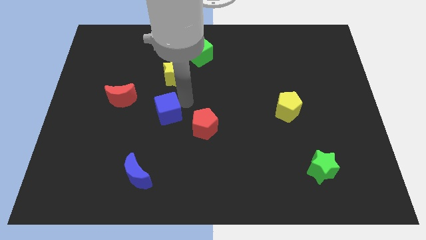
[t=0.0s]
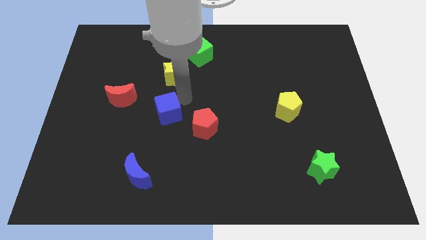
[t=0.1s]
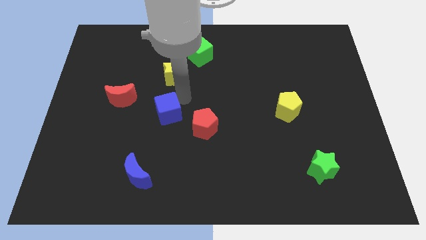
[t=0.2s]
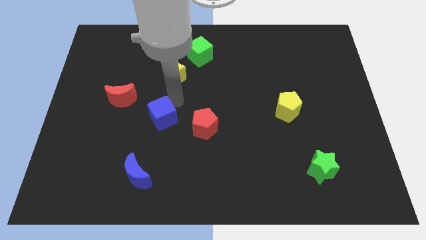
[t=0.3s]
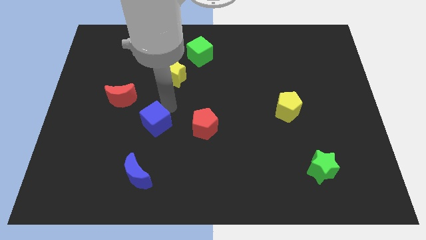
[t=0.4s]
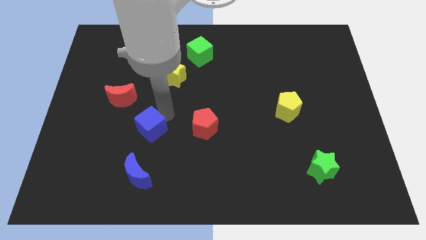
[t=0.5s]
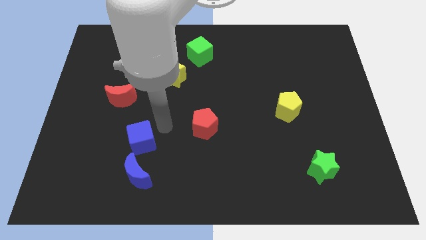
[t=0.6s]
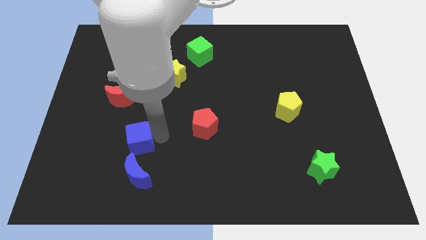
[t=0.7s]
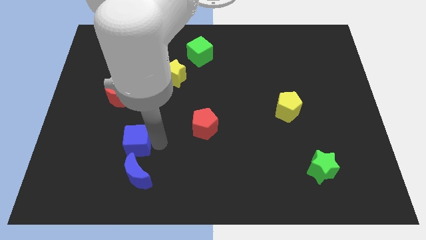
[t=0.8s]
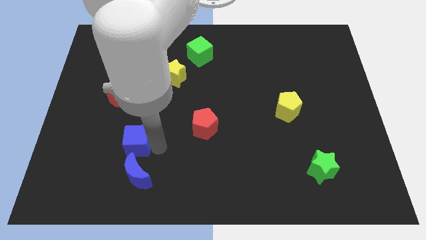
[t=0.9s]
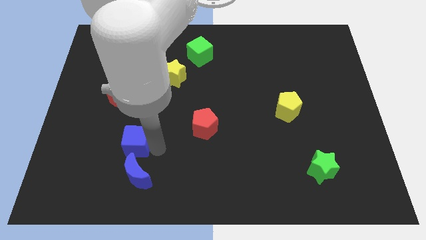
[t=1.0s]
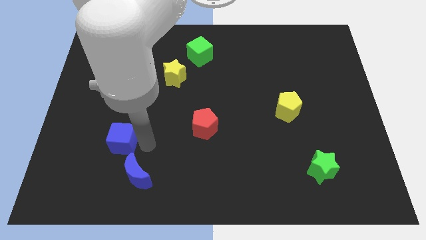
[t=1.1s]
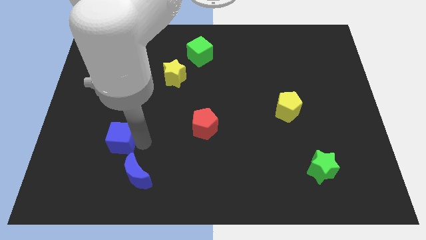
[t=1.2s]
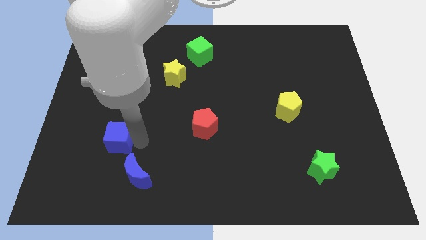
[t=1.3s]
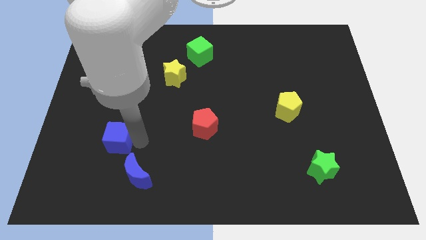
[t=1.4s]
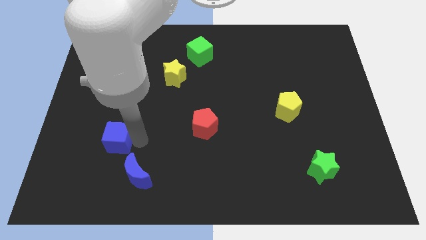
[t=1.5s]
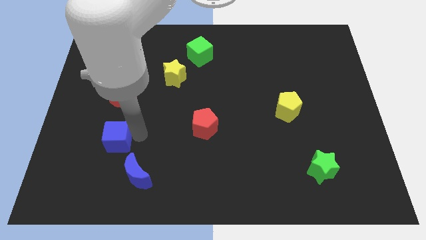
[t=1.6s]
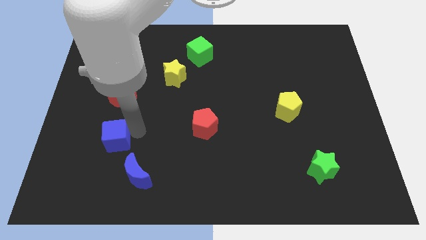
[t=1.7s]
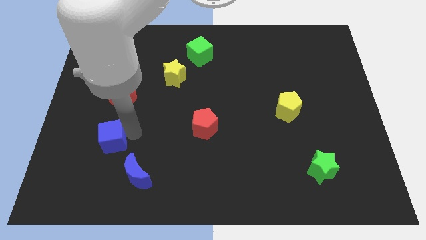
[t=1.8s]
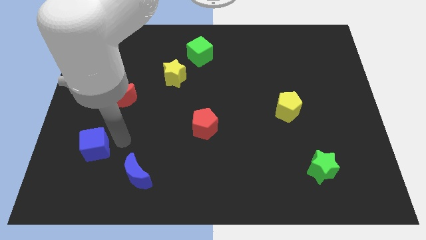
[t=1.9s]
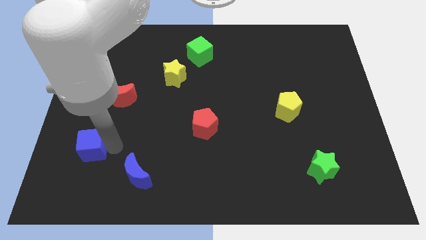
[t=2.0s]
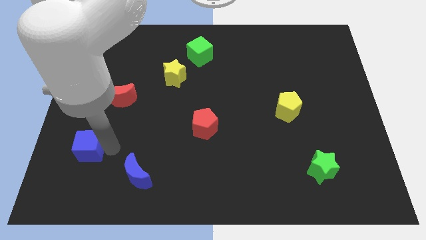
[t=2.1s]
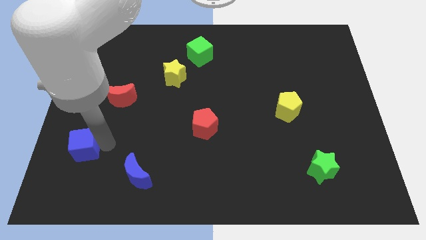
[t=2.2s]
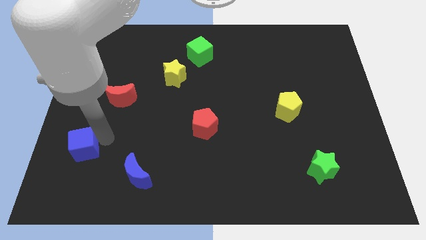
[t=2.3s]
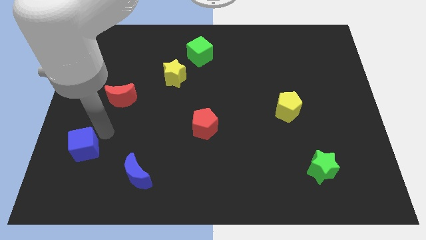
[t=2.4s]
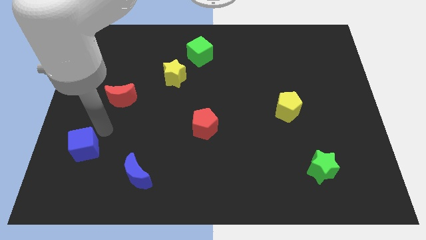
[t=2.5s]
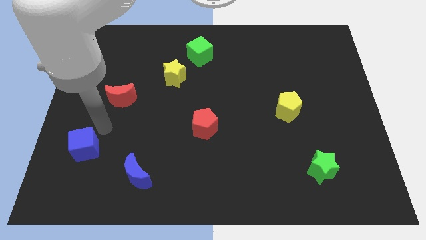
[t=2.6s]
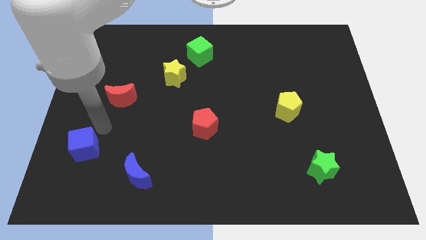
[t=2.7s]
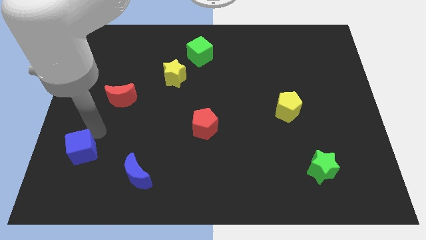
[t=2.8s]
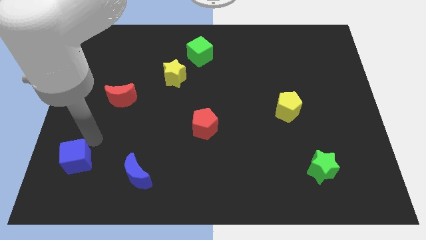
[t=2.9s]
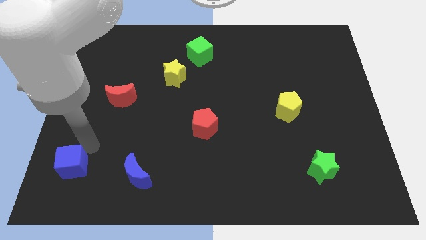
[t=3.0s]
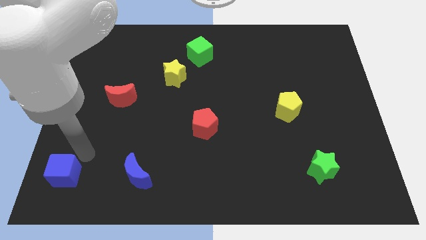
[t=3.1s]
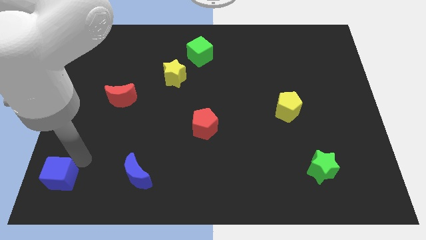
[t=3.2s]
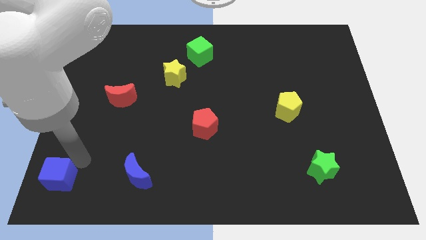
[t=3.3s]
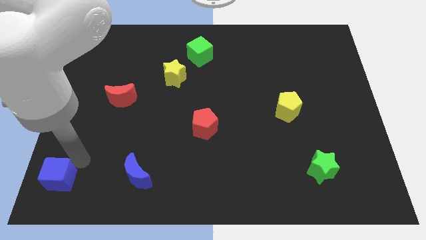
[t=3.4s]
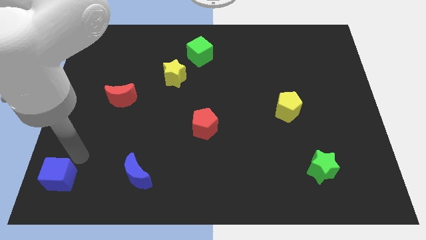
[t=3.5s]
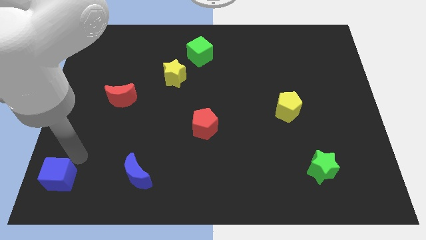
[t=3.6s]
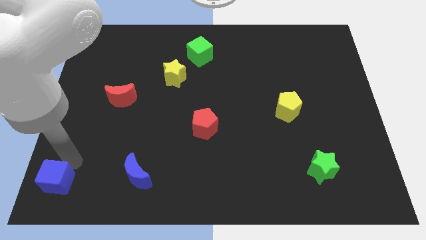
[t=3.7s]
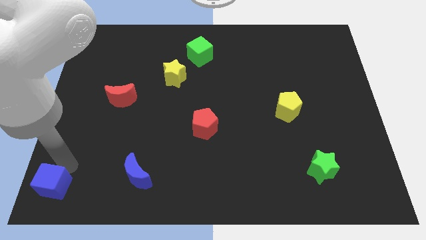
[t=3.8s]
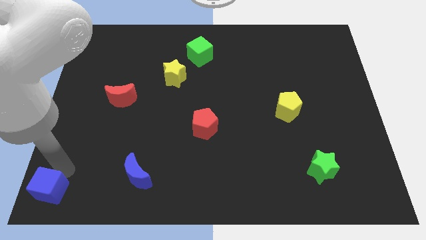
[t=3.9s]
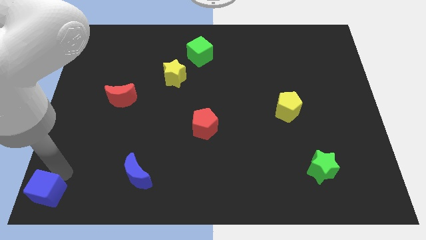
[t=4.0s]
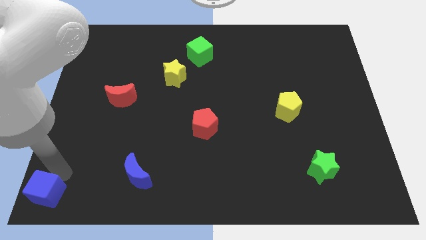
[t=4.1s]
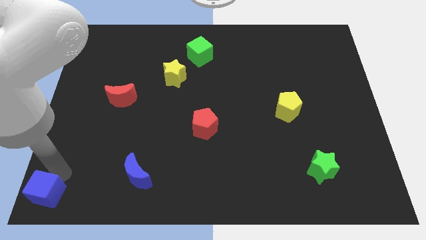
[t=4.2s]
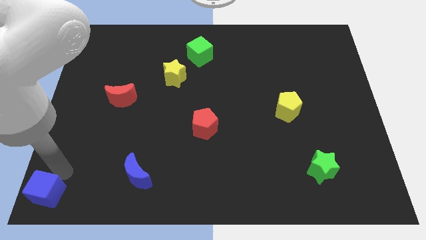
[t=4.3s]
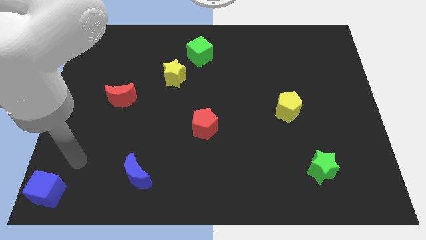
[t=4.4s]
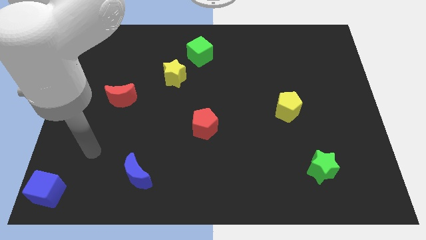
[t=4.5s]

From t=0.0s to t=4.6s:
move the blue cube to the bottom left corner of the board

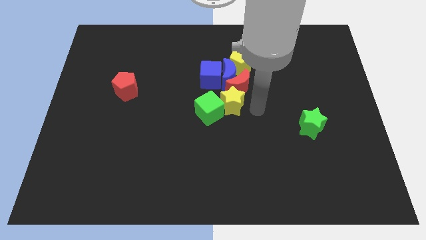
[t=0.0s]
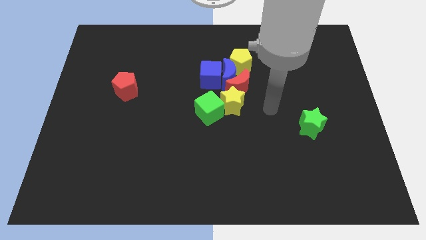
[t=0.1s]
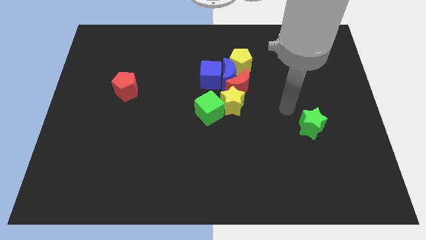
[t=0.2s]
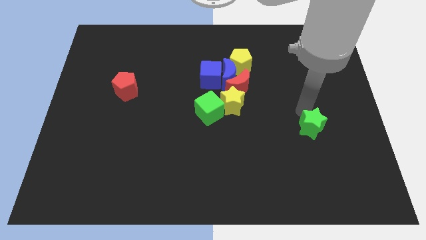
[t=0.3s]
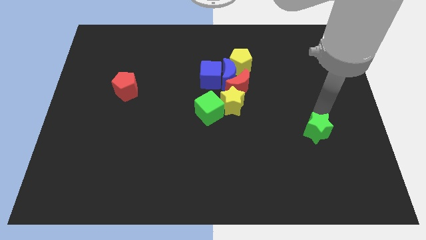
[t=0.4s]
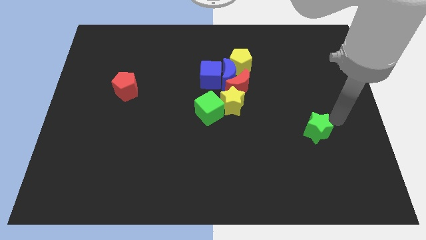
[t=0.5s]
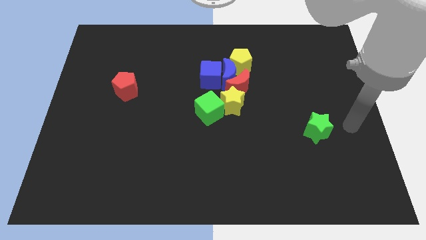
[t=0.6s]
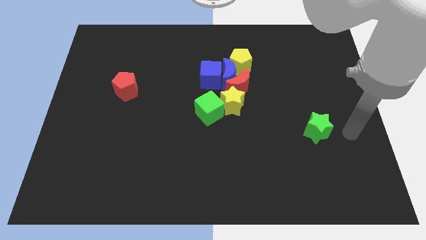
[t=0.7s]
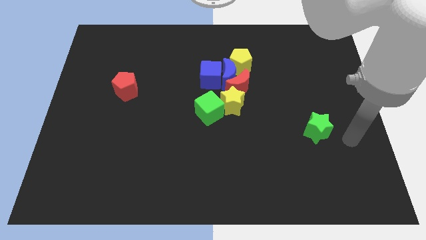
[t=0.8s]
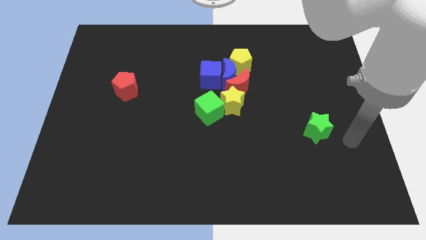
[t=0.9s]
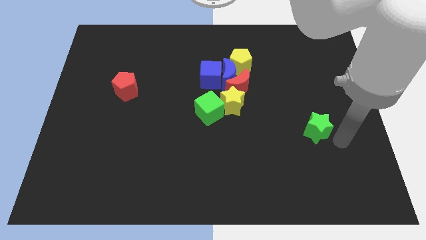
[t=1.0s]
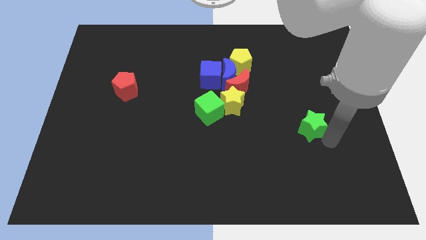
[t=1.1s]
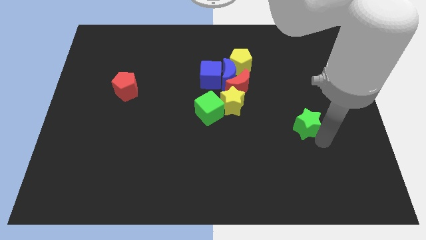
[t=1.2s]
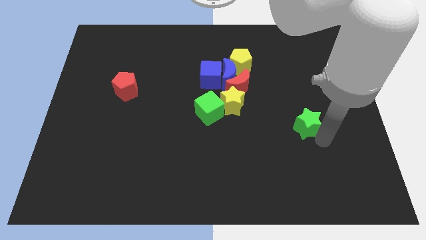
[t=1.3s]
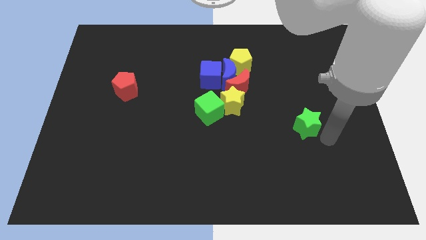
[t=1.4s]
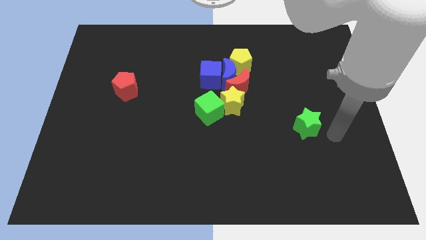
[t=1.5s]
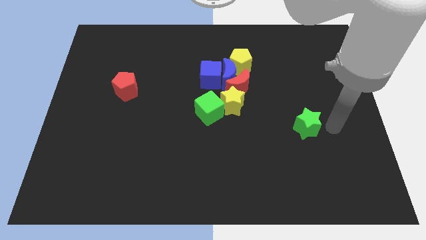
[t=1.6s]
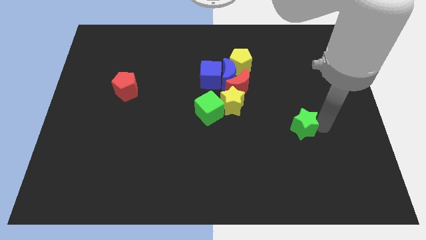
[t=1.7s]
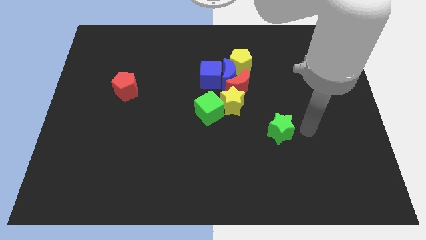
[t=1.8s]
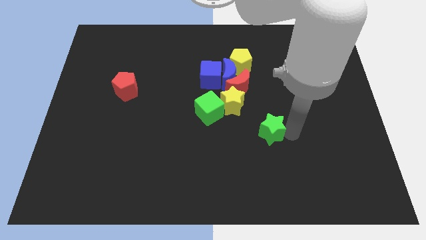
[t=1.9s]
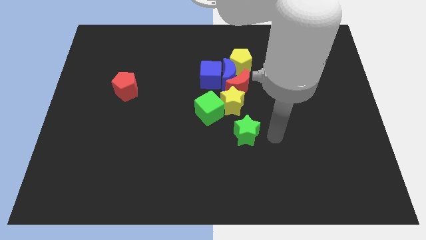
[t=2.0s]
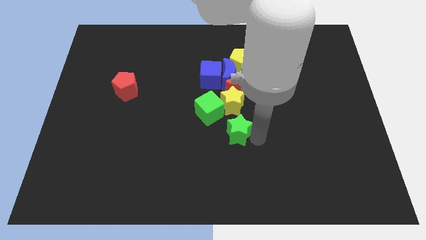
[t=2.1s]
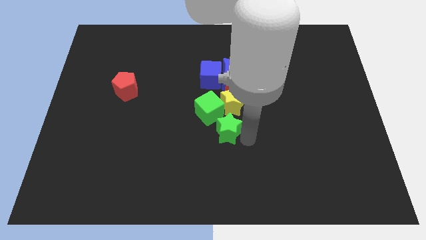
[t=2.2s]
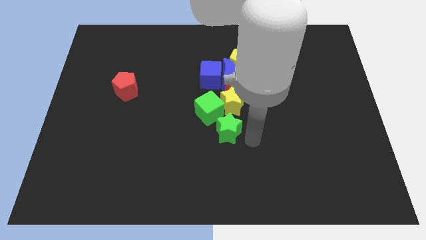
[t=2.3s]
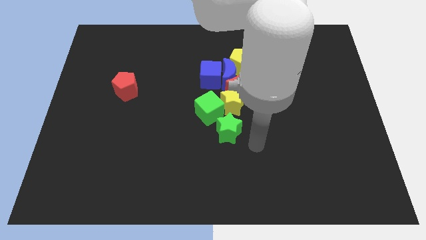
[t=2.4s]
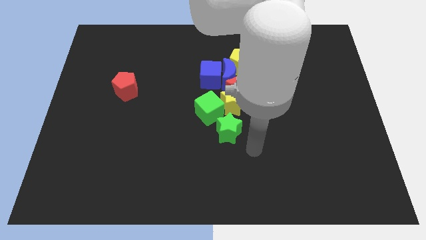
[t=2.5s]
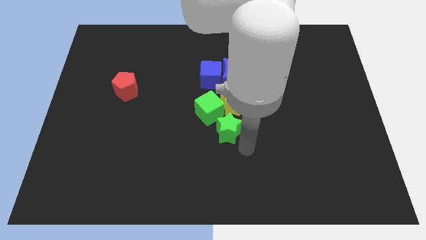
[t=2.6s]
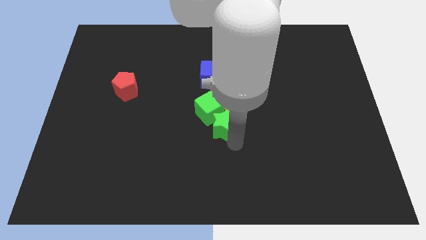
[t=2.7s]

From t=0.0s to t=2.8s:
place green star below the yellow star

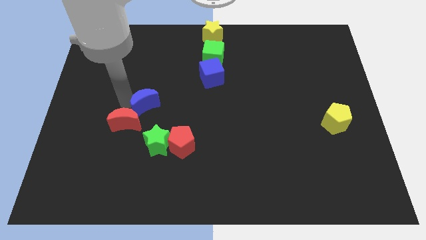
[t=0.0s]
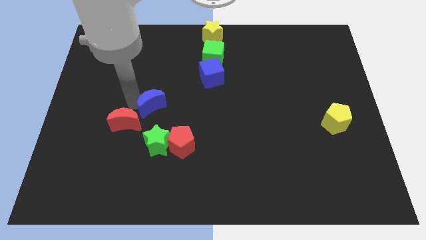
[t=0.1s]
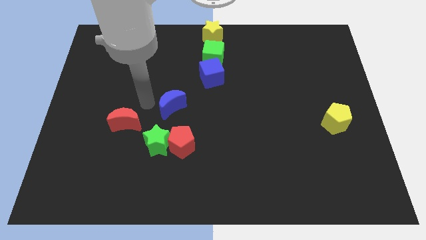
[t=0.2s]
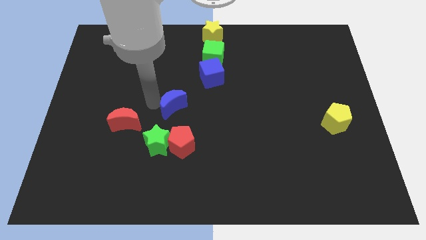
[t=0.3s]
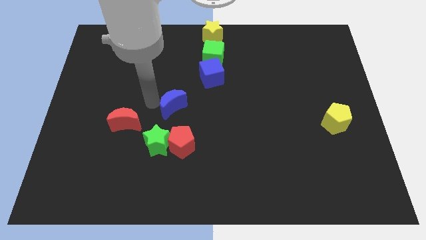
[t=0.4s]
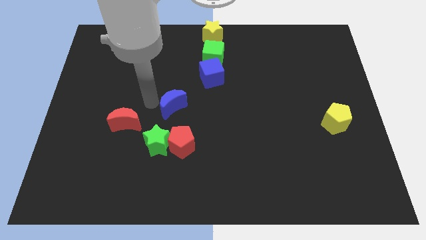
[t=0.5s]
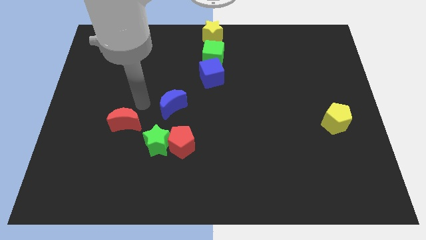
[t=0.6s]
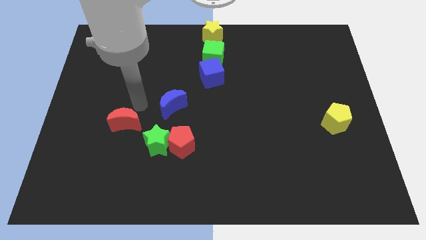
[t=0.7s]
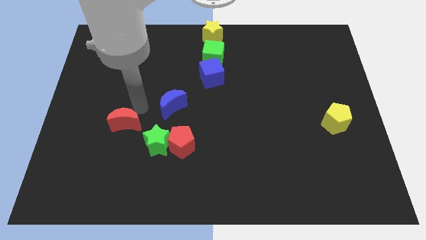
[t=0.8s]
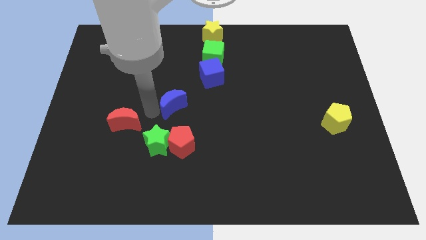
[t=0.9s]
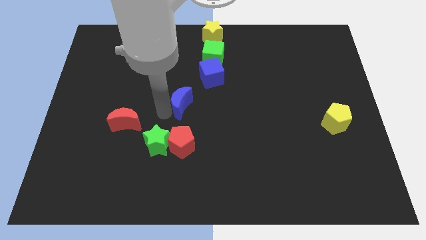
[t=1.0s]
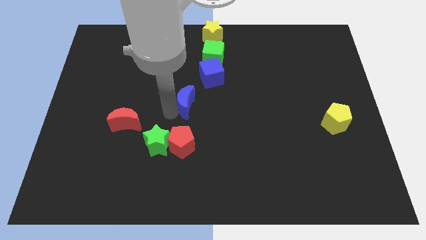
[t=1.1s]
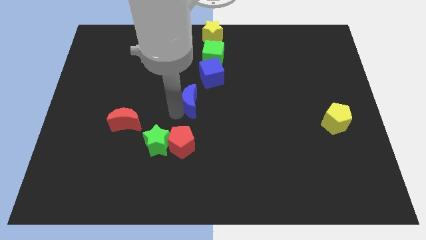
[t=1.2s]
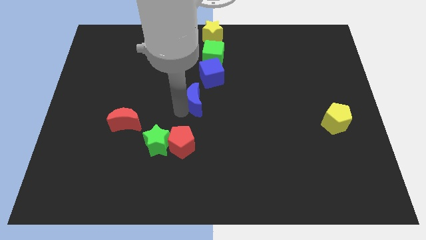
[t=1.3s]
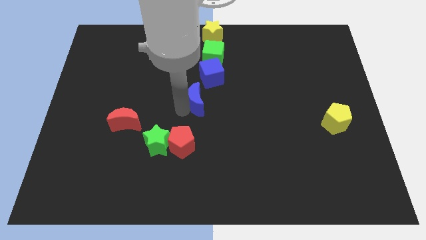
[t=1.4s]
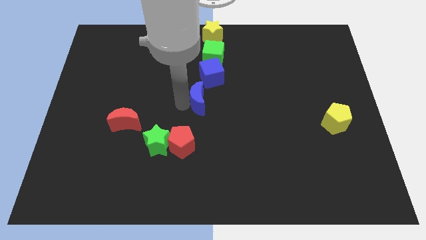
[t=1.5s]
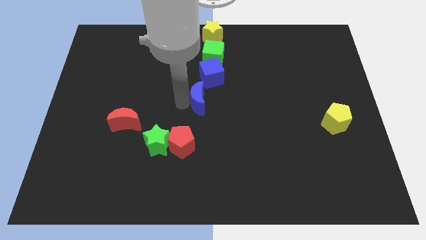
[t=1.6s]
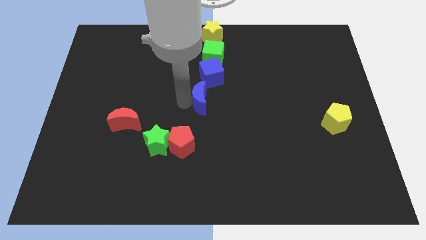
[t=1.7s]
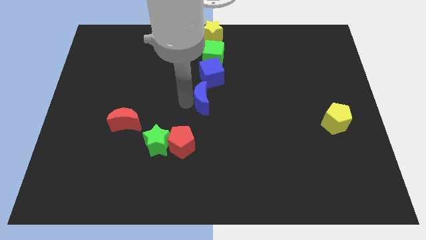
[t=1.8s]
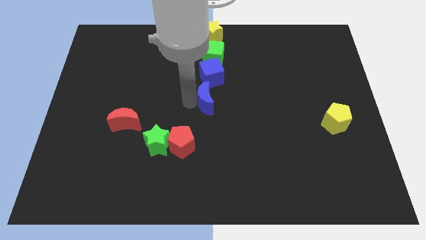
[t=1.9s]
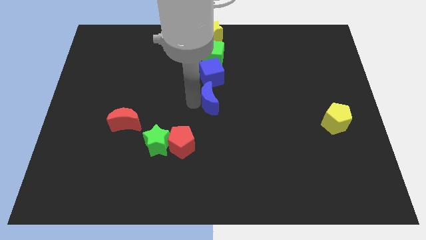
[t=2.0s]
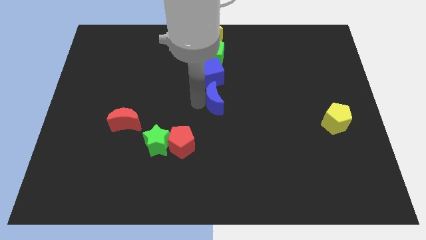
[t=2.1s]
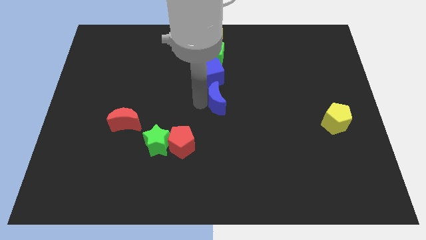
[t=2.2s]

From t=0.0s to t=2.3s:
move the blue moon under the blue cube
